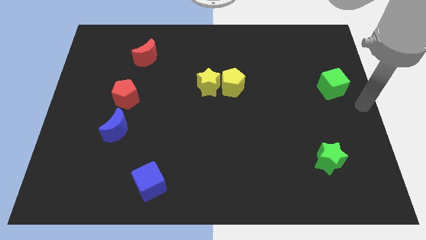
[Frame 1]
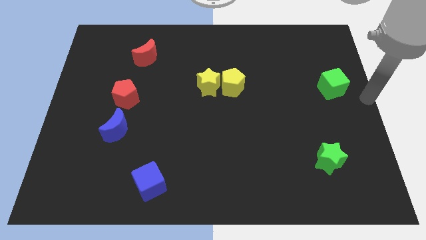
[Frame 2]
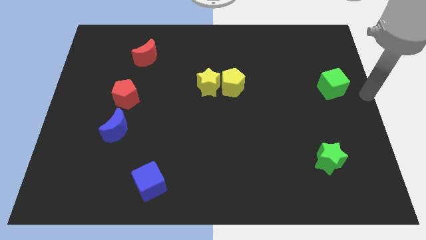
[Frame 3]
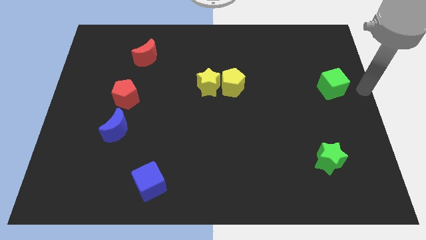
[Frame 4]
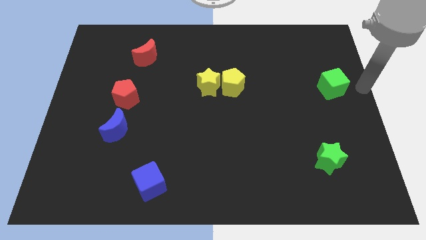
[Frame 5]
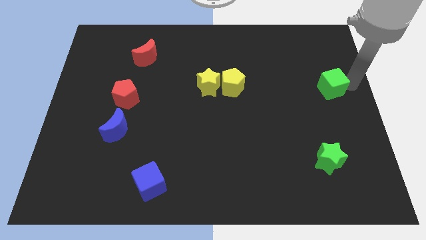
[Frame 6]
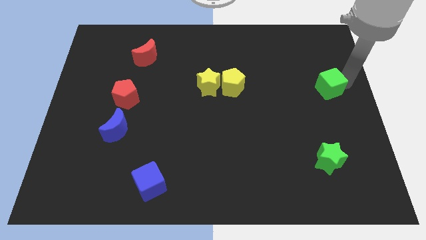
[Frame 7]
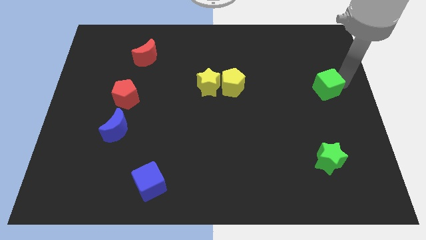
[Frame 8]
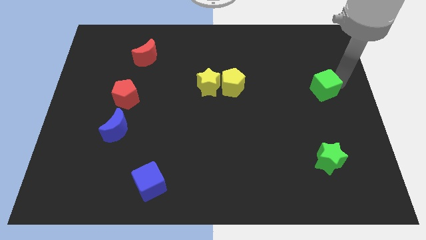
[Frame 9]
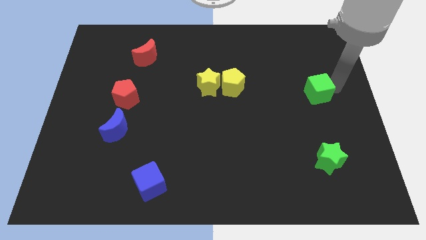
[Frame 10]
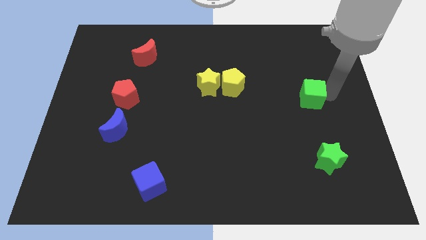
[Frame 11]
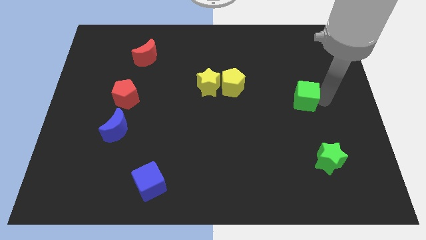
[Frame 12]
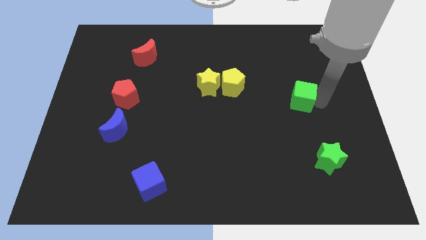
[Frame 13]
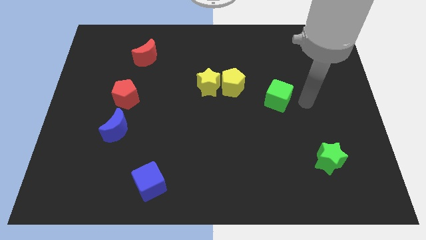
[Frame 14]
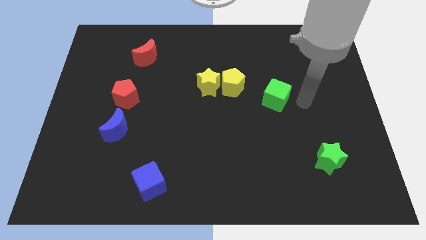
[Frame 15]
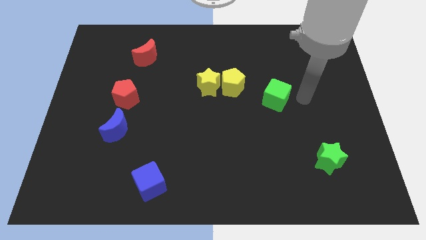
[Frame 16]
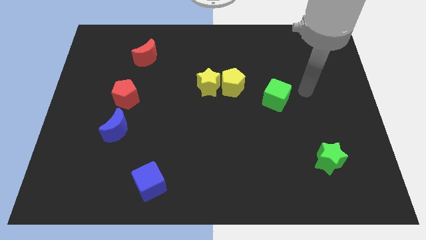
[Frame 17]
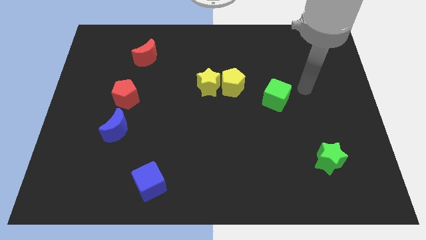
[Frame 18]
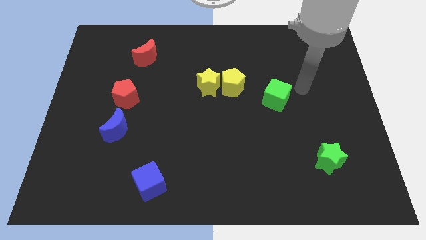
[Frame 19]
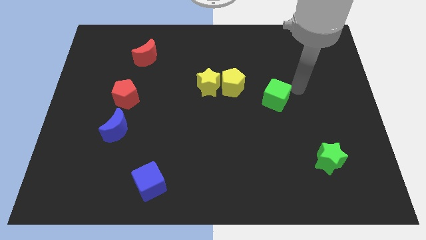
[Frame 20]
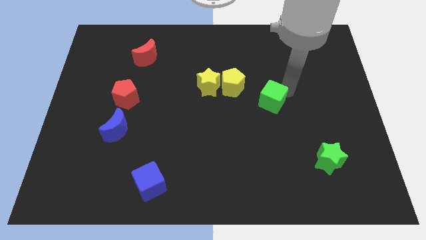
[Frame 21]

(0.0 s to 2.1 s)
slide the green cube towards the yellow pentagon

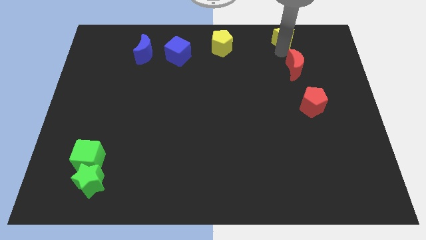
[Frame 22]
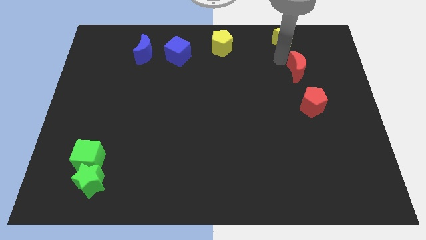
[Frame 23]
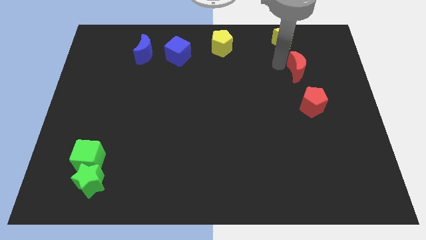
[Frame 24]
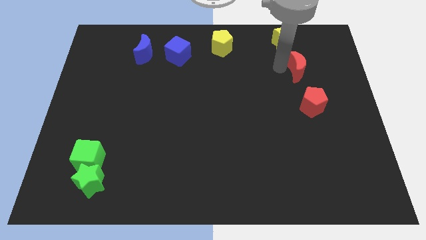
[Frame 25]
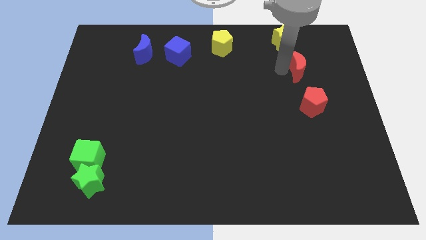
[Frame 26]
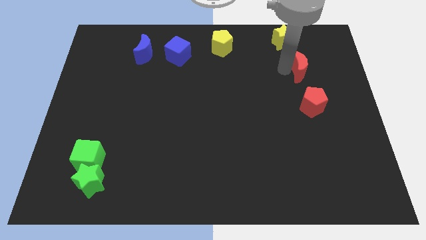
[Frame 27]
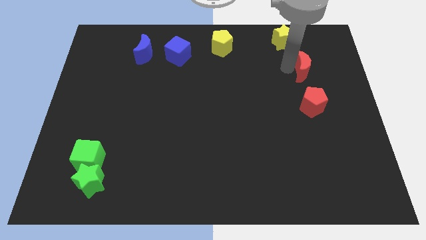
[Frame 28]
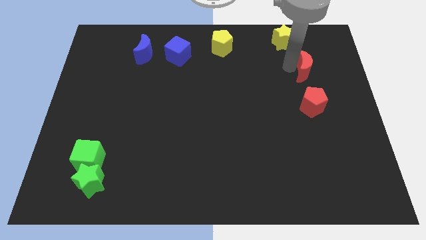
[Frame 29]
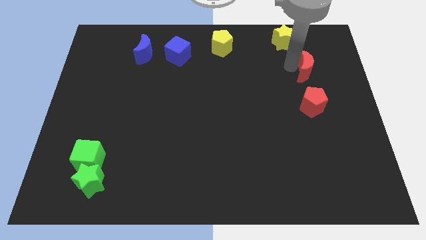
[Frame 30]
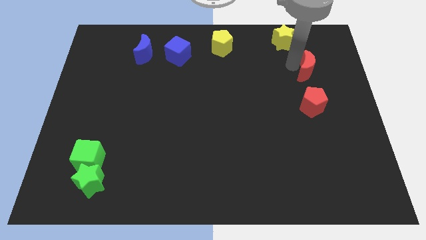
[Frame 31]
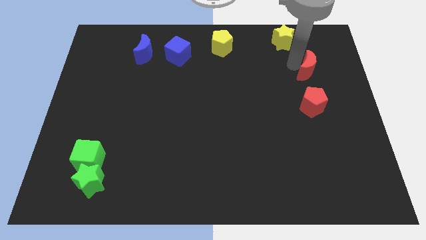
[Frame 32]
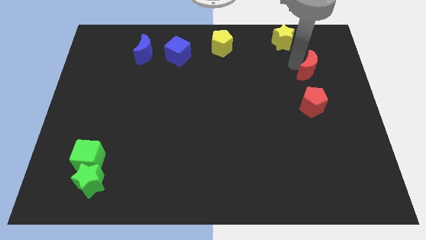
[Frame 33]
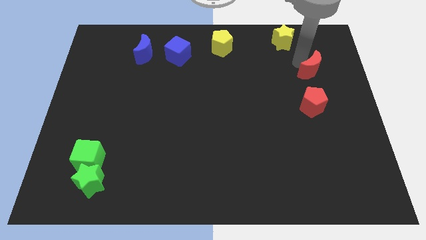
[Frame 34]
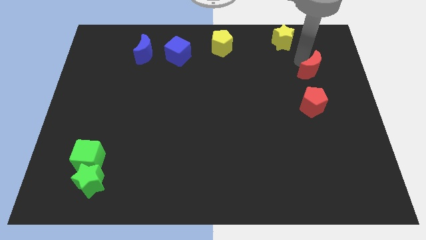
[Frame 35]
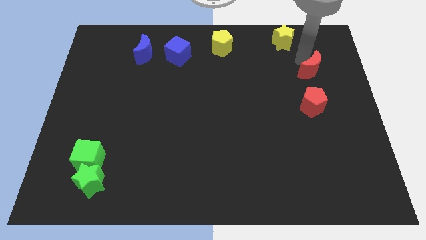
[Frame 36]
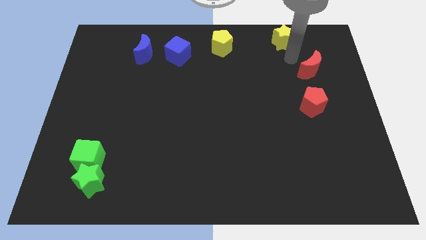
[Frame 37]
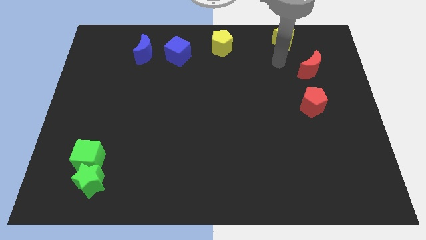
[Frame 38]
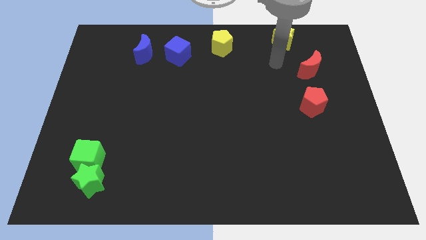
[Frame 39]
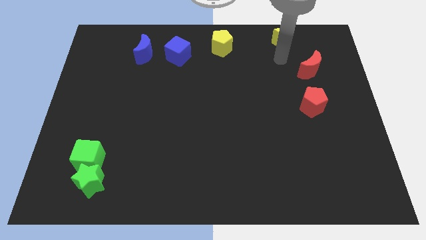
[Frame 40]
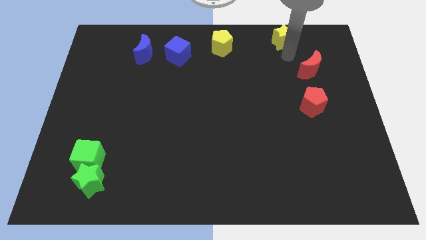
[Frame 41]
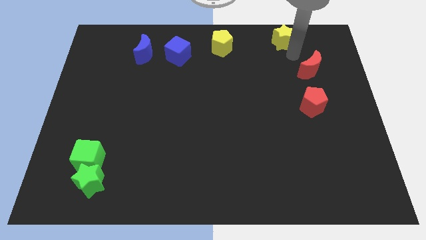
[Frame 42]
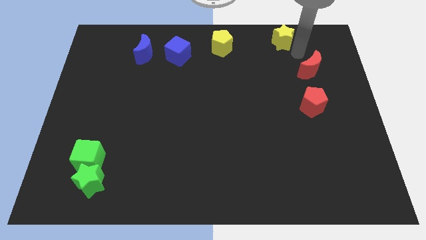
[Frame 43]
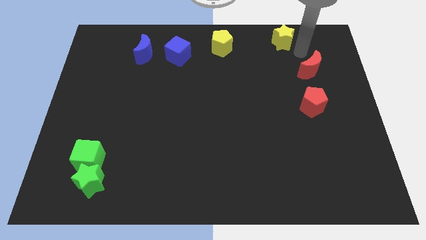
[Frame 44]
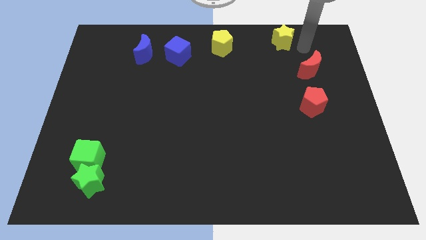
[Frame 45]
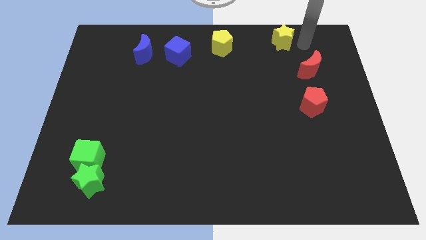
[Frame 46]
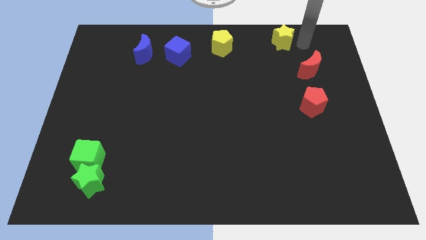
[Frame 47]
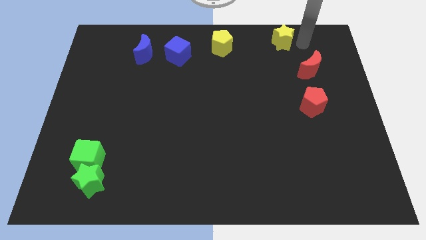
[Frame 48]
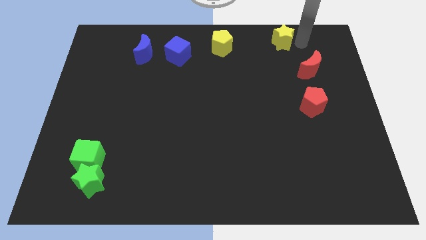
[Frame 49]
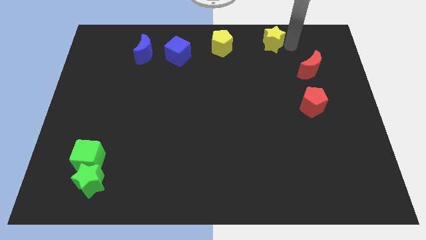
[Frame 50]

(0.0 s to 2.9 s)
move the red moon slightly to the right

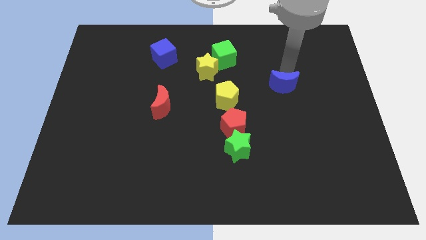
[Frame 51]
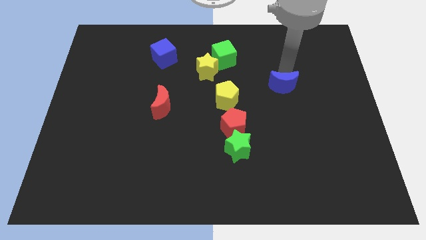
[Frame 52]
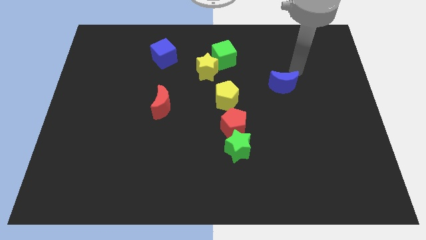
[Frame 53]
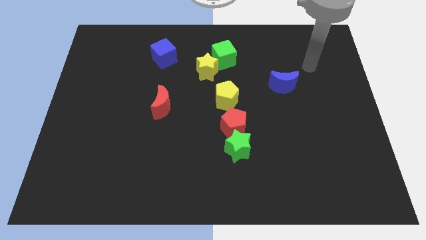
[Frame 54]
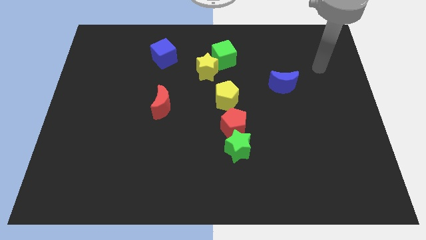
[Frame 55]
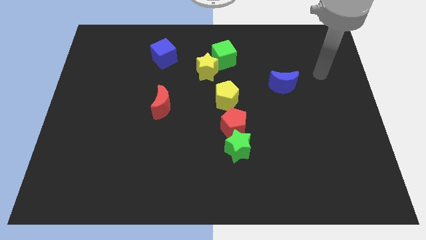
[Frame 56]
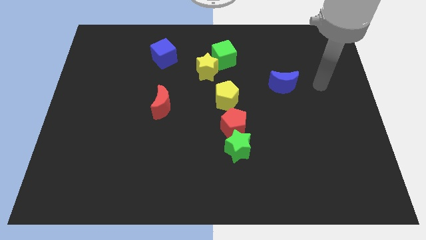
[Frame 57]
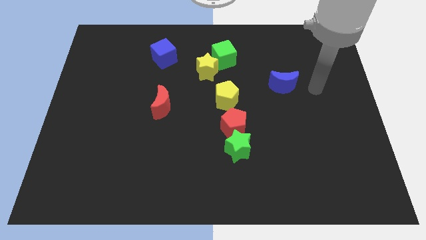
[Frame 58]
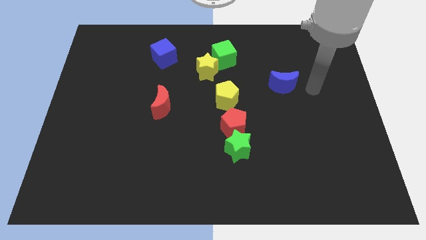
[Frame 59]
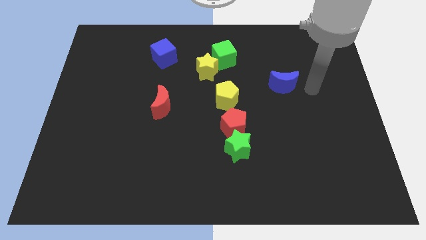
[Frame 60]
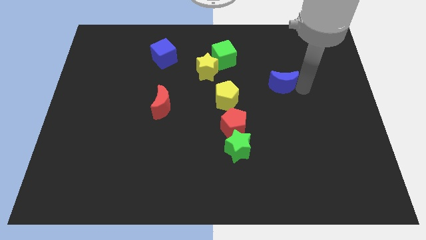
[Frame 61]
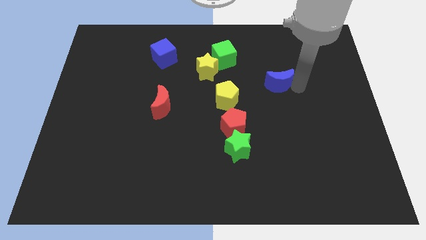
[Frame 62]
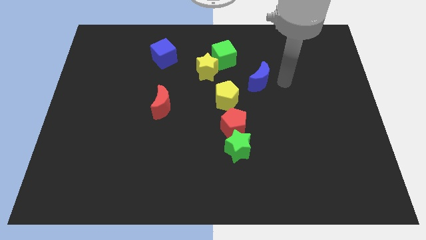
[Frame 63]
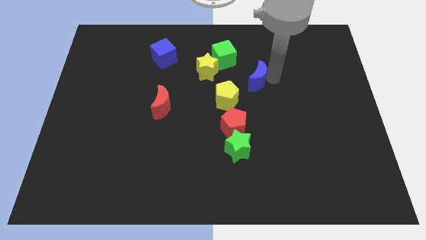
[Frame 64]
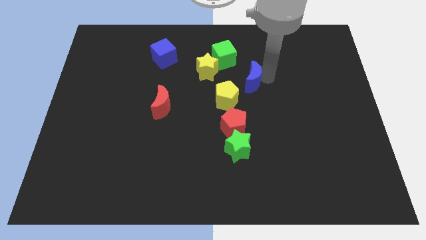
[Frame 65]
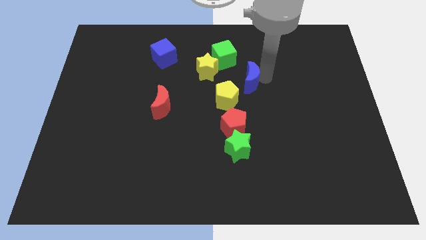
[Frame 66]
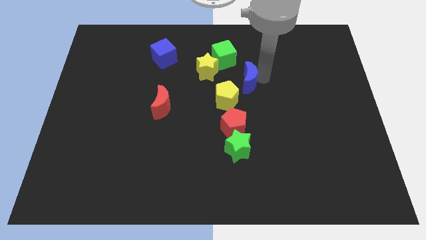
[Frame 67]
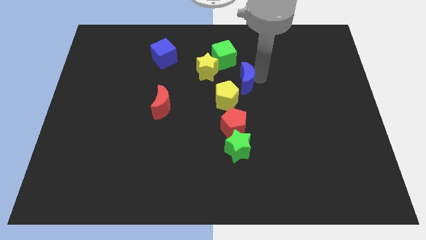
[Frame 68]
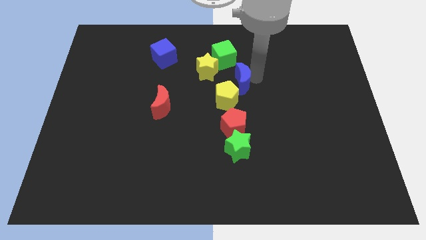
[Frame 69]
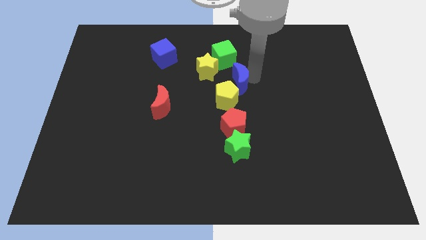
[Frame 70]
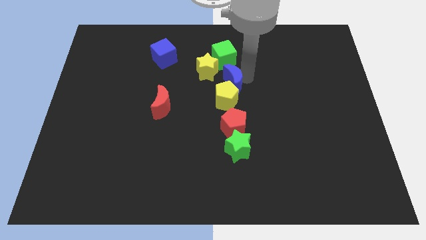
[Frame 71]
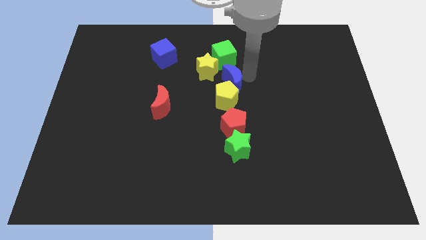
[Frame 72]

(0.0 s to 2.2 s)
place the blue crescent above the yellow pentagon

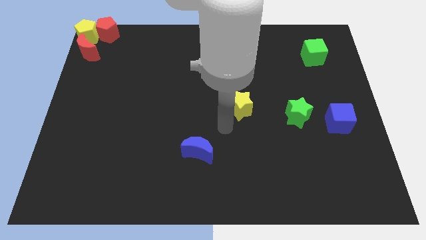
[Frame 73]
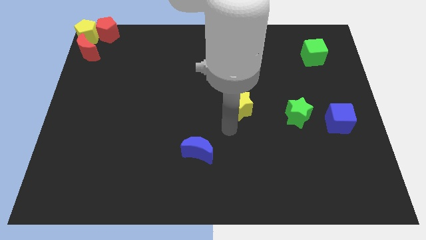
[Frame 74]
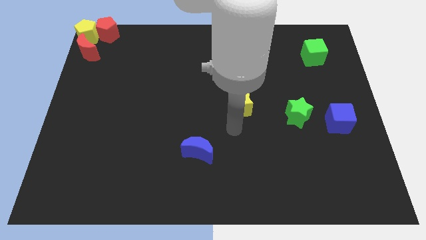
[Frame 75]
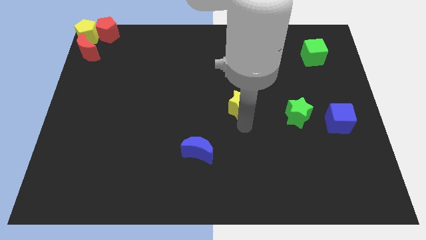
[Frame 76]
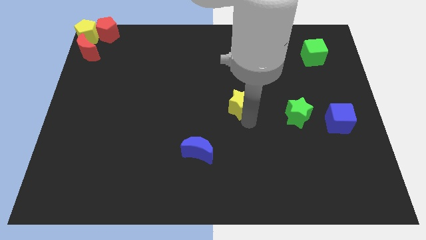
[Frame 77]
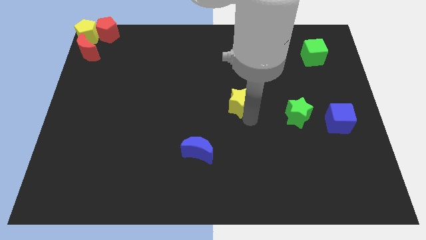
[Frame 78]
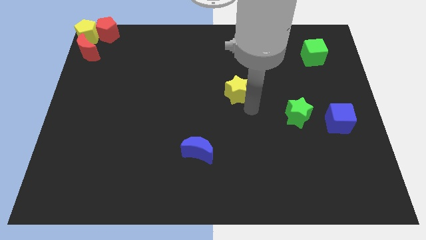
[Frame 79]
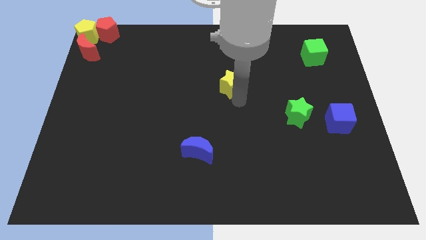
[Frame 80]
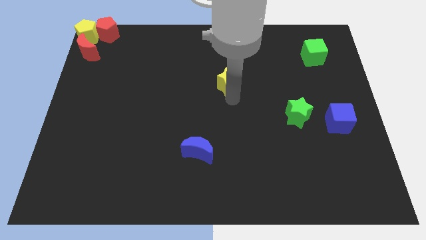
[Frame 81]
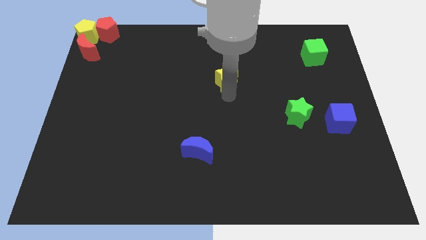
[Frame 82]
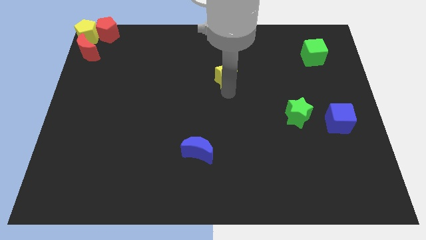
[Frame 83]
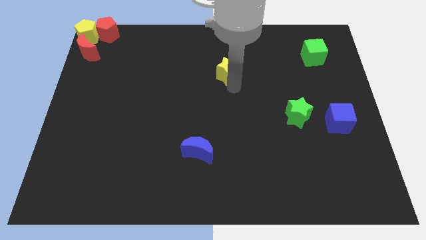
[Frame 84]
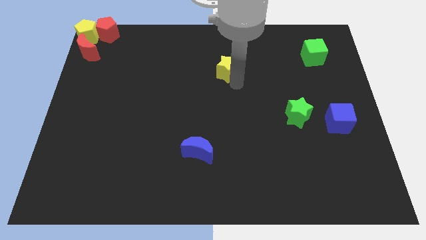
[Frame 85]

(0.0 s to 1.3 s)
slightly push the yellow star upward

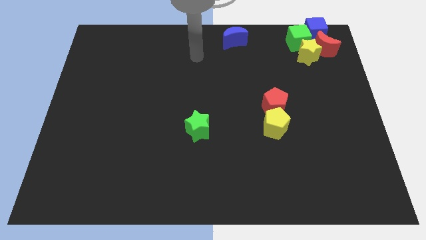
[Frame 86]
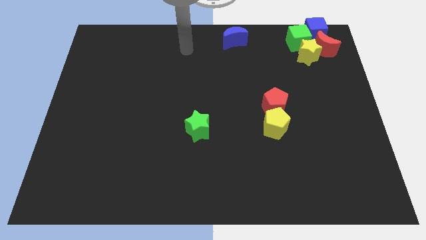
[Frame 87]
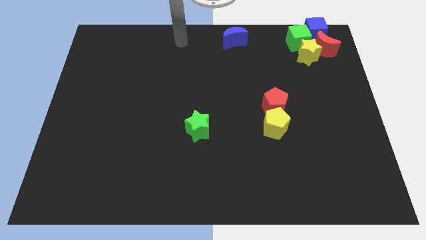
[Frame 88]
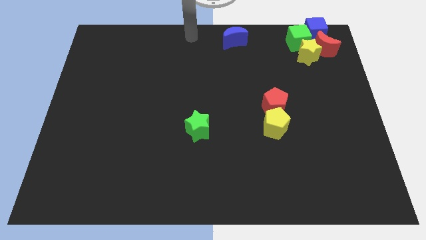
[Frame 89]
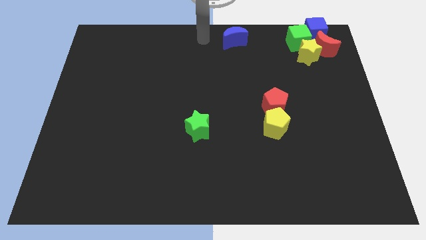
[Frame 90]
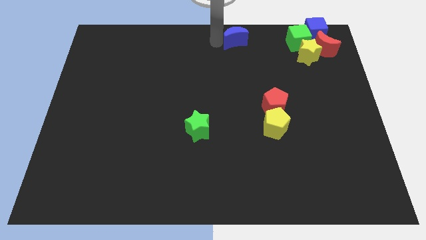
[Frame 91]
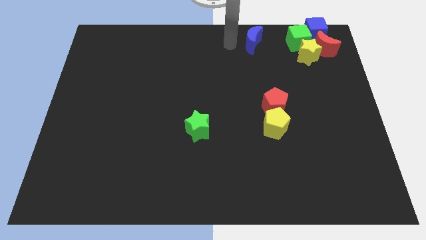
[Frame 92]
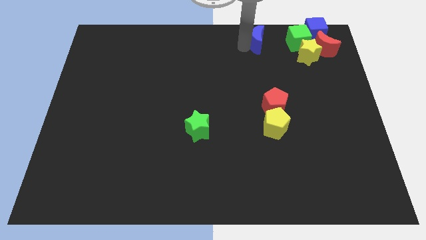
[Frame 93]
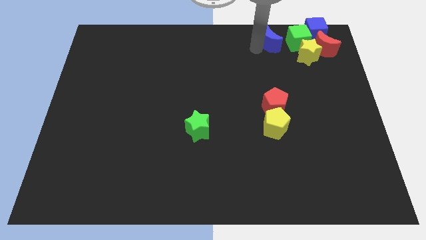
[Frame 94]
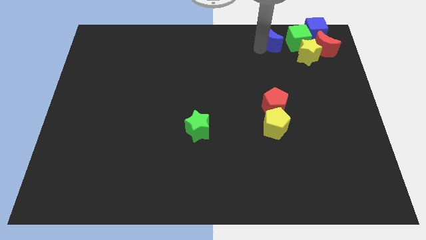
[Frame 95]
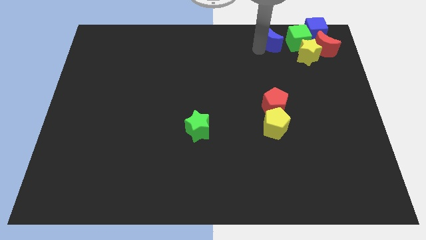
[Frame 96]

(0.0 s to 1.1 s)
slide blue moon towards the green cube
